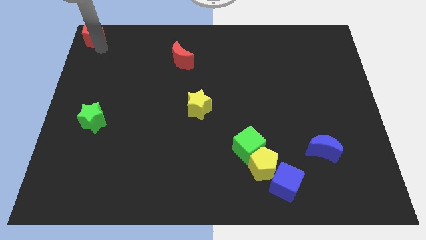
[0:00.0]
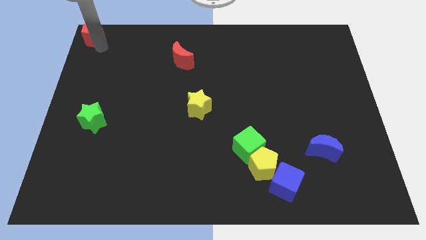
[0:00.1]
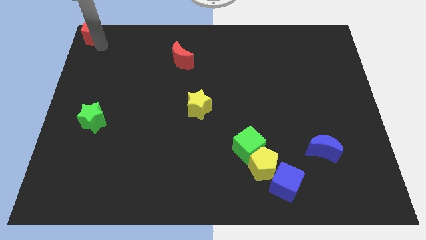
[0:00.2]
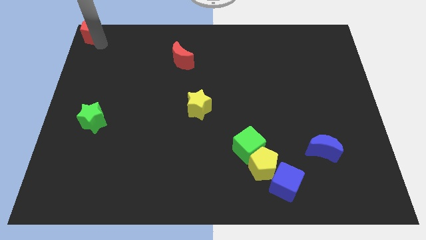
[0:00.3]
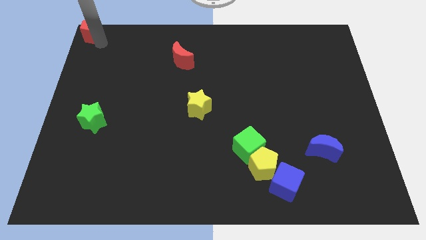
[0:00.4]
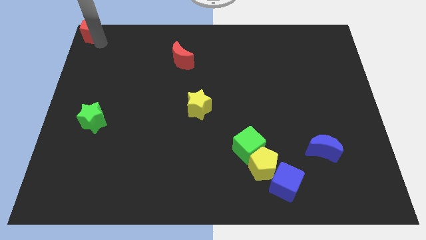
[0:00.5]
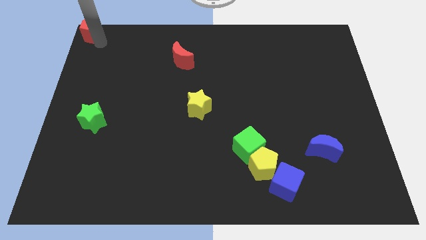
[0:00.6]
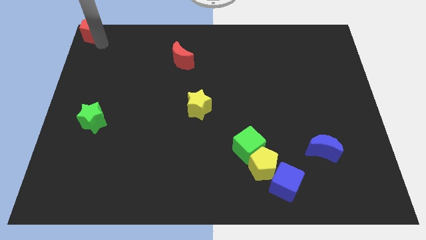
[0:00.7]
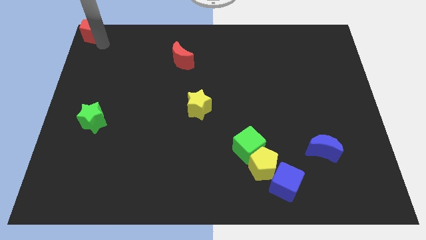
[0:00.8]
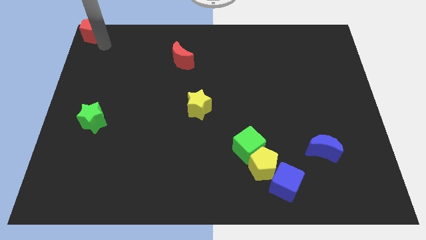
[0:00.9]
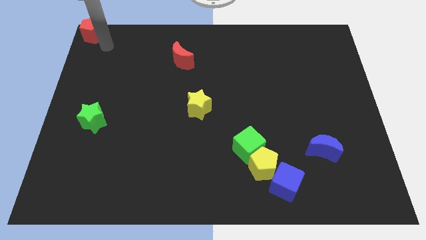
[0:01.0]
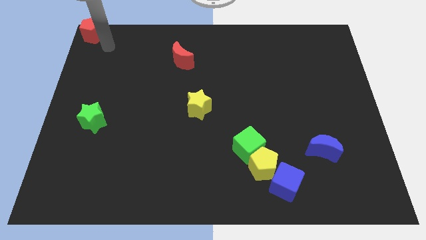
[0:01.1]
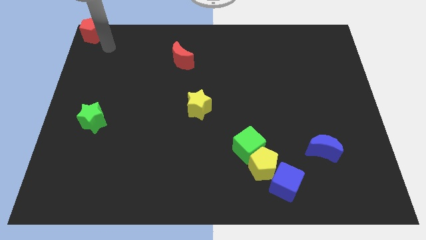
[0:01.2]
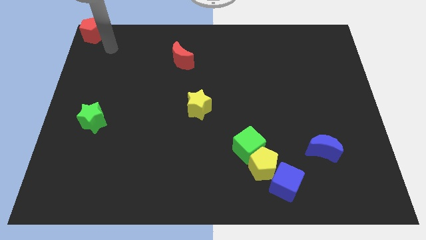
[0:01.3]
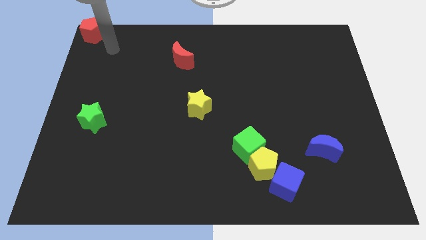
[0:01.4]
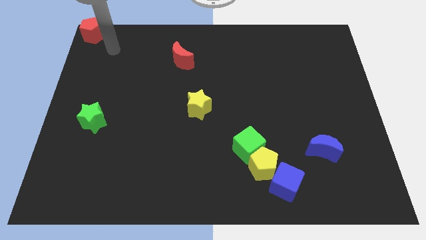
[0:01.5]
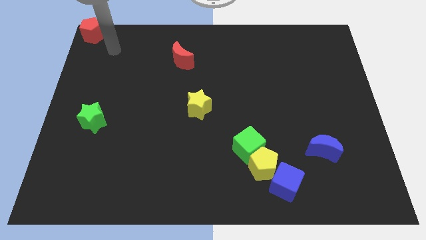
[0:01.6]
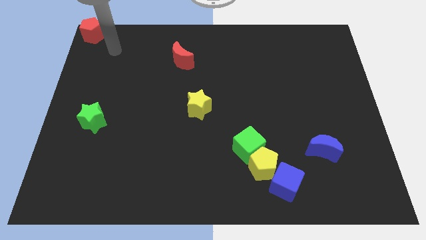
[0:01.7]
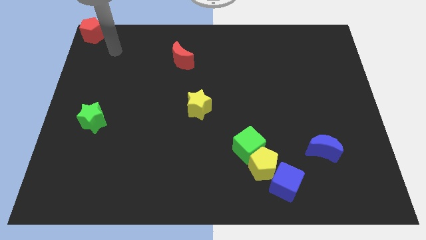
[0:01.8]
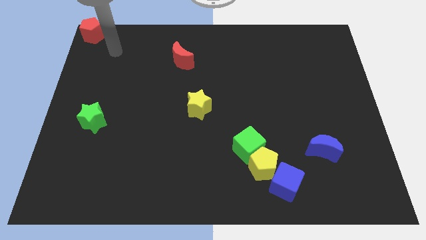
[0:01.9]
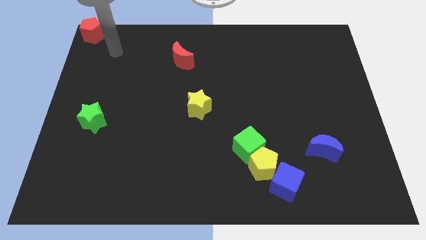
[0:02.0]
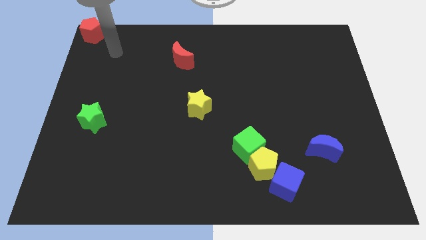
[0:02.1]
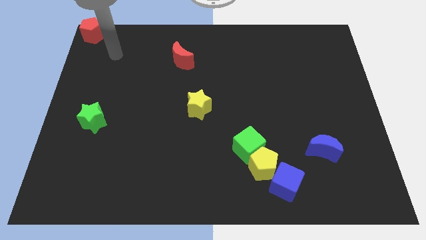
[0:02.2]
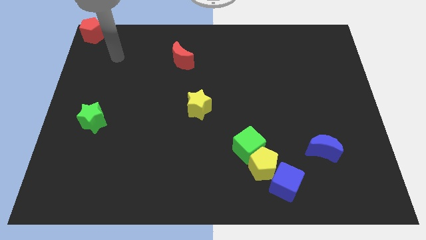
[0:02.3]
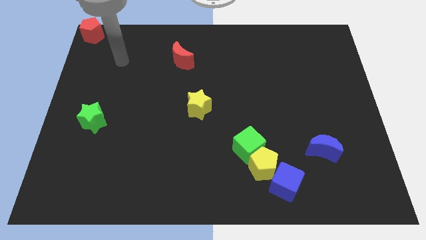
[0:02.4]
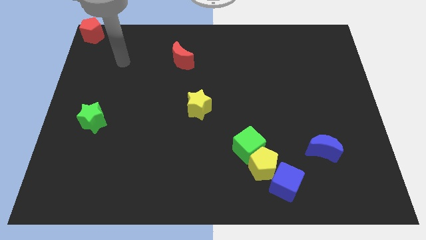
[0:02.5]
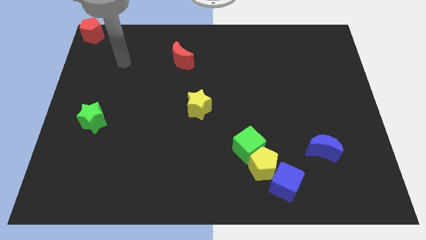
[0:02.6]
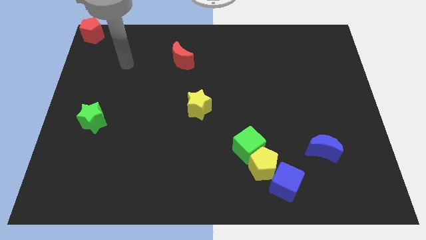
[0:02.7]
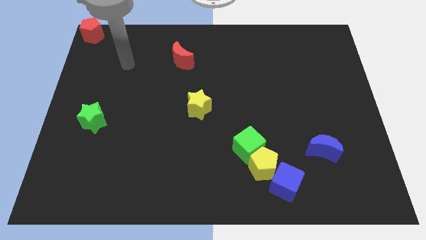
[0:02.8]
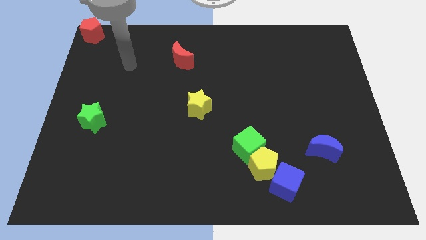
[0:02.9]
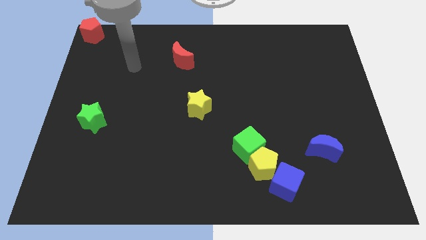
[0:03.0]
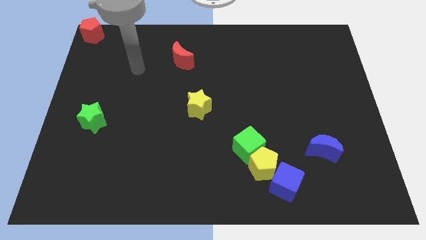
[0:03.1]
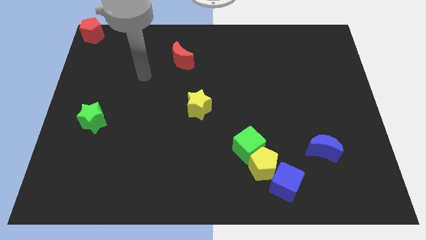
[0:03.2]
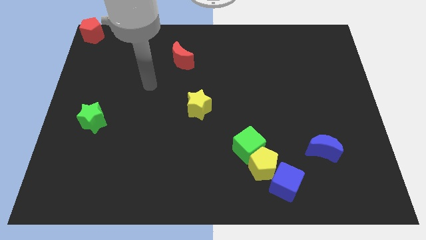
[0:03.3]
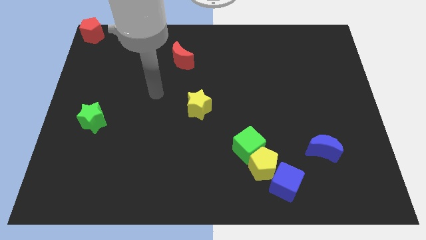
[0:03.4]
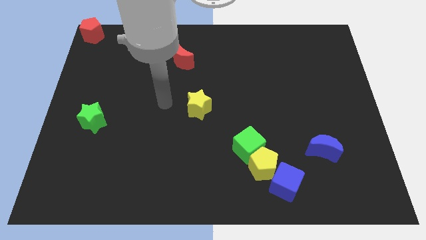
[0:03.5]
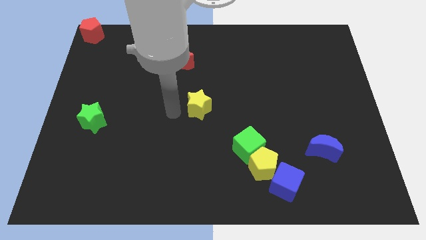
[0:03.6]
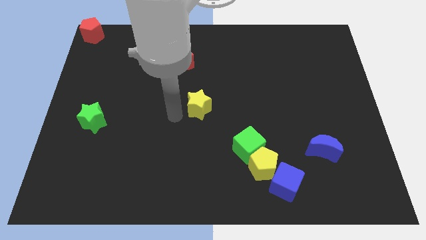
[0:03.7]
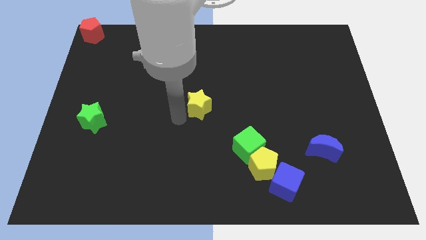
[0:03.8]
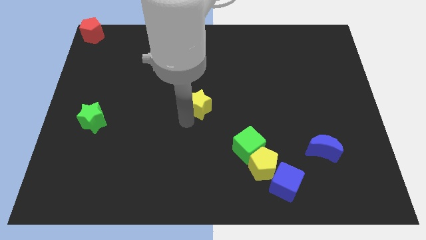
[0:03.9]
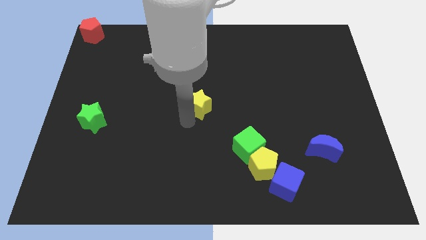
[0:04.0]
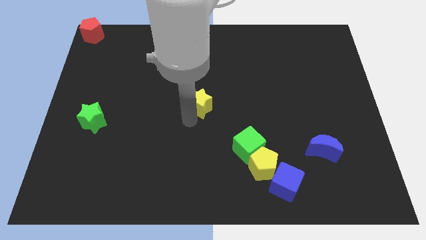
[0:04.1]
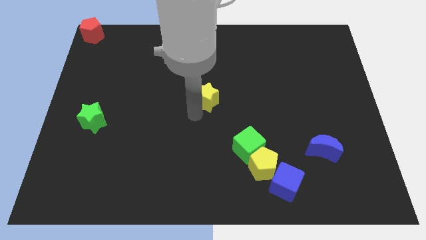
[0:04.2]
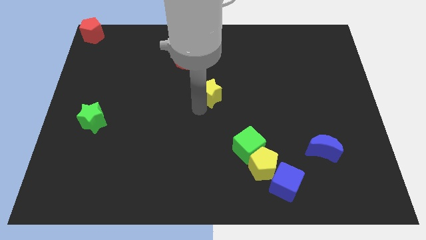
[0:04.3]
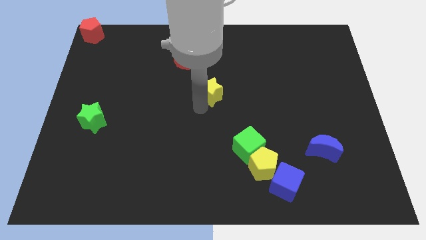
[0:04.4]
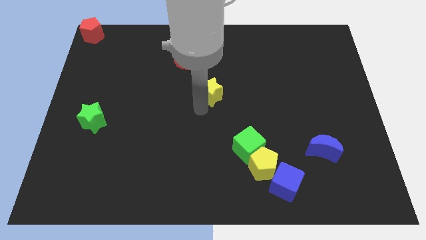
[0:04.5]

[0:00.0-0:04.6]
slide the yellow star to the center of the board

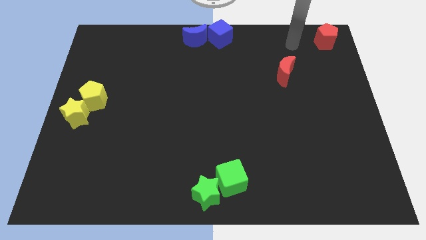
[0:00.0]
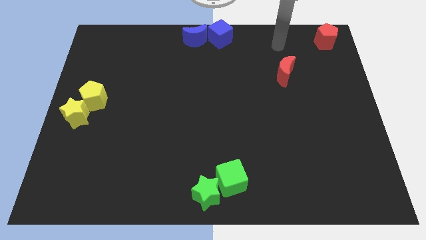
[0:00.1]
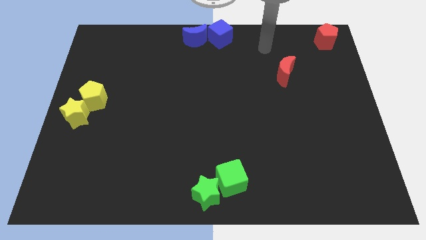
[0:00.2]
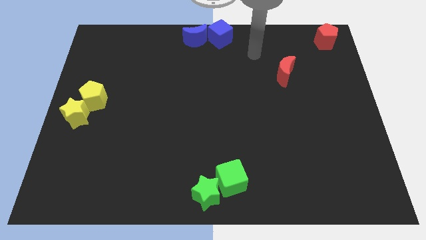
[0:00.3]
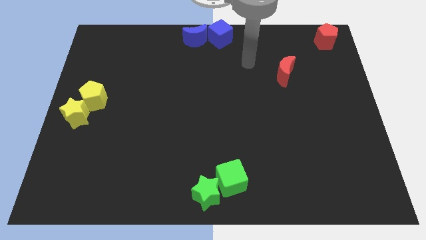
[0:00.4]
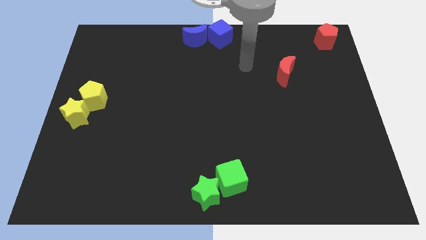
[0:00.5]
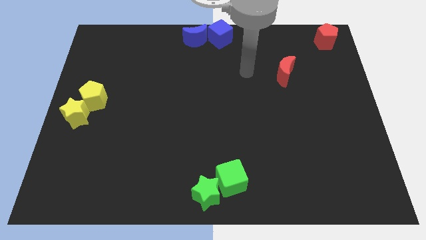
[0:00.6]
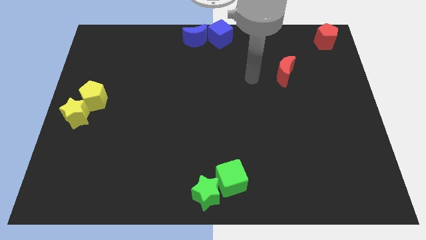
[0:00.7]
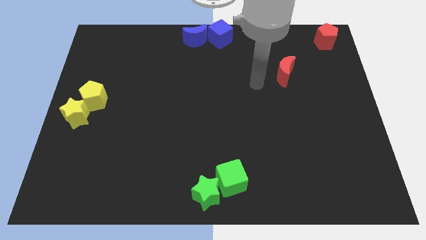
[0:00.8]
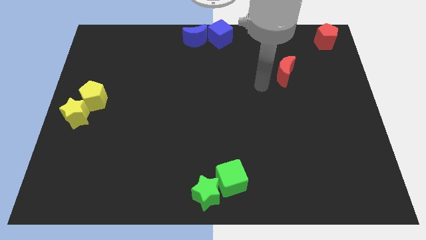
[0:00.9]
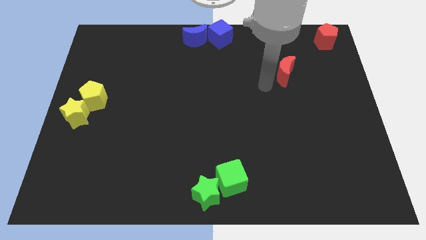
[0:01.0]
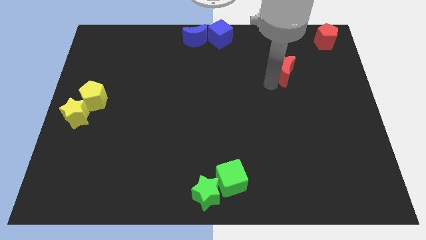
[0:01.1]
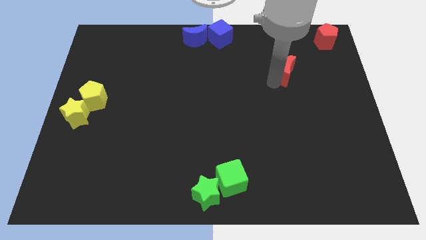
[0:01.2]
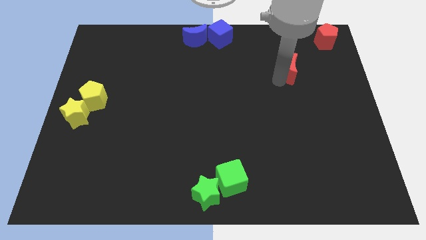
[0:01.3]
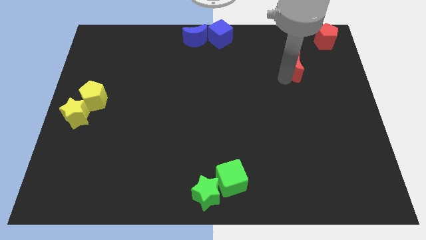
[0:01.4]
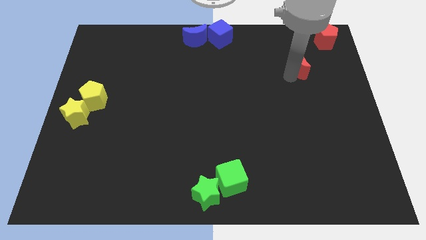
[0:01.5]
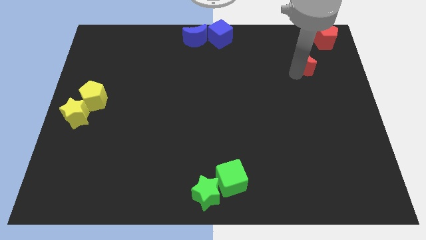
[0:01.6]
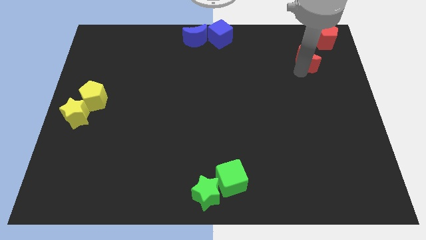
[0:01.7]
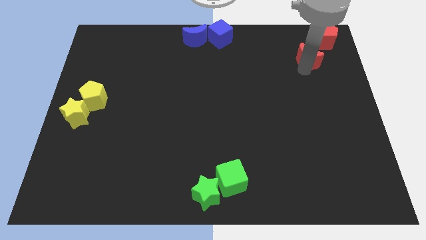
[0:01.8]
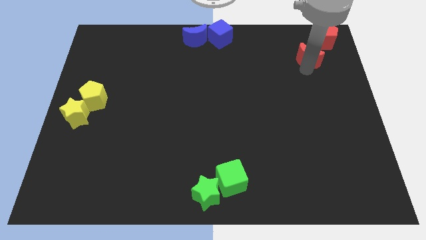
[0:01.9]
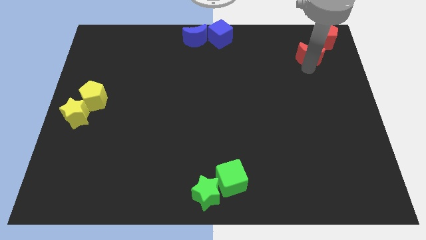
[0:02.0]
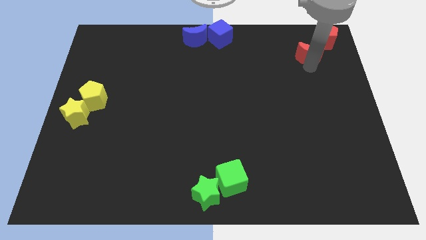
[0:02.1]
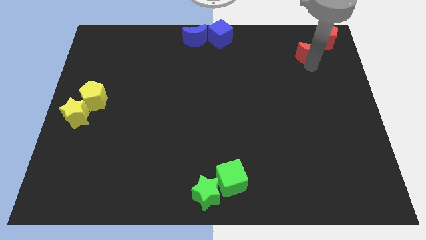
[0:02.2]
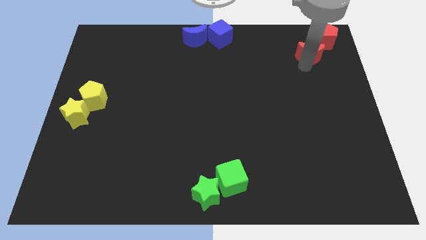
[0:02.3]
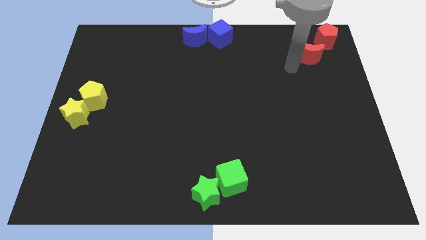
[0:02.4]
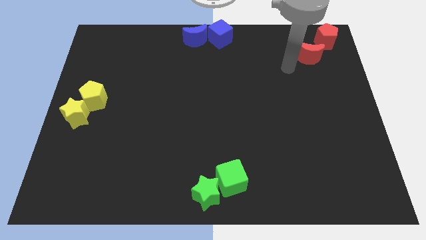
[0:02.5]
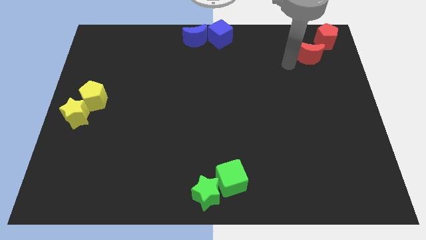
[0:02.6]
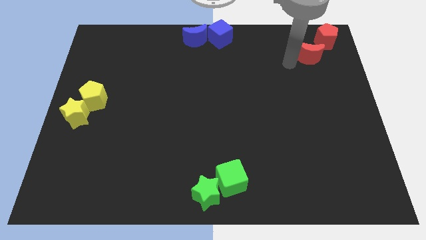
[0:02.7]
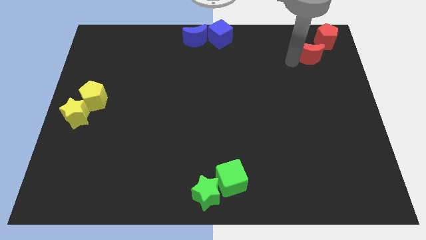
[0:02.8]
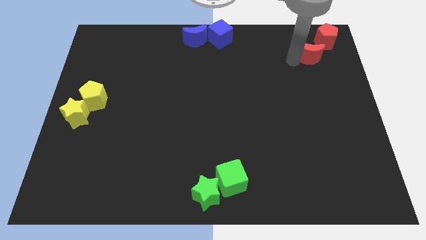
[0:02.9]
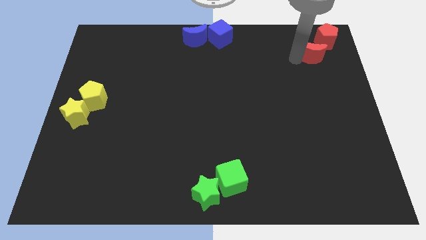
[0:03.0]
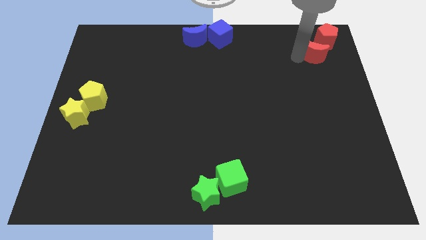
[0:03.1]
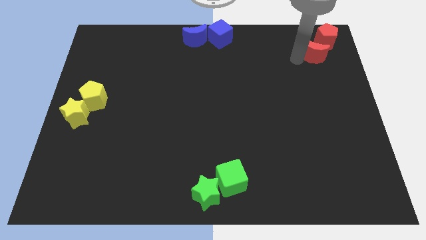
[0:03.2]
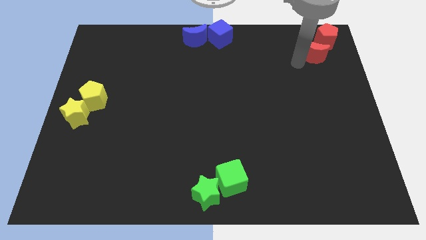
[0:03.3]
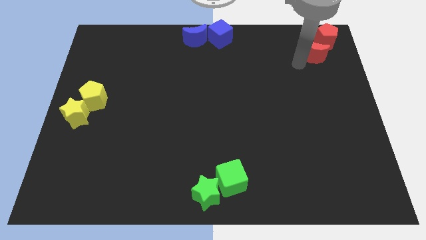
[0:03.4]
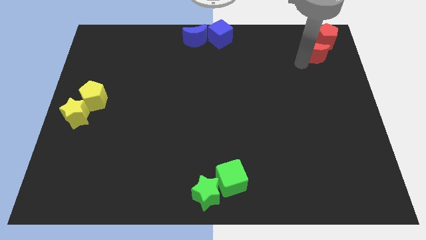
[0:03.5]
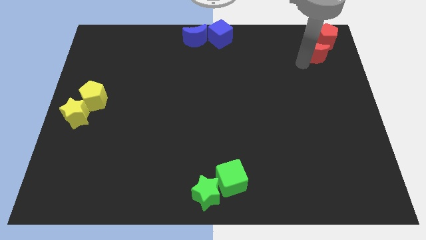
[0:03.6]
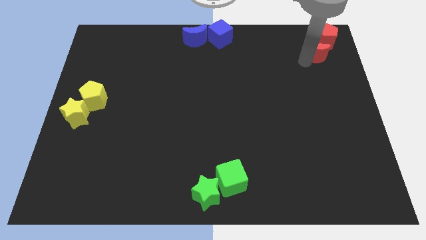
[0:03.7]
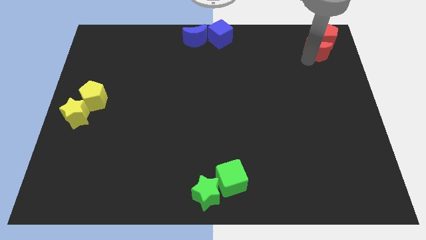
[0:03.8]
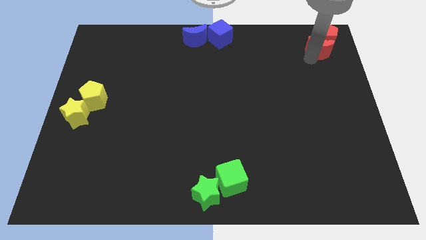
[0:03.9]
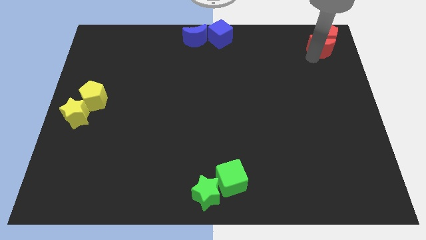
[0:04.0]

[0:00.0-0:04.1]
push the red moon into the red pentagon
